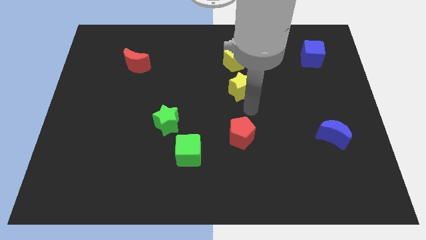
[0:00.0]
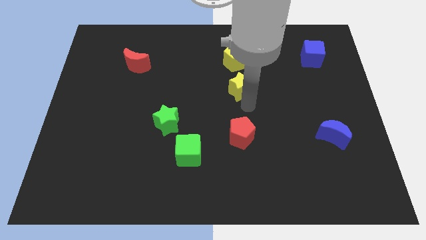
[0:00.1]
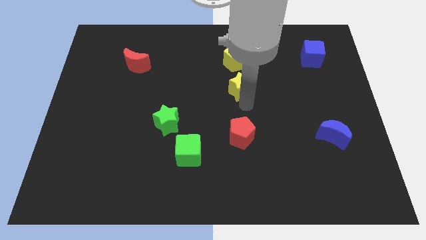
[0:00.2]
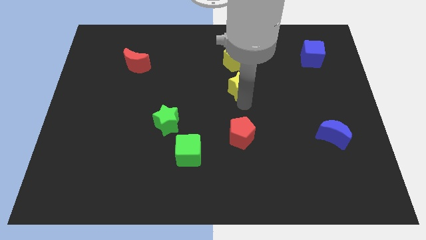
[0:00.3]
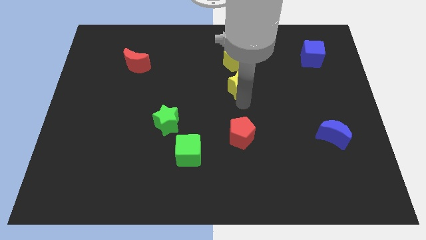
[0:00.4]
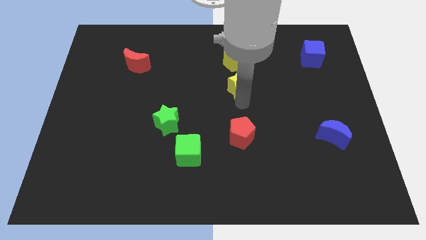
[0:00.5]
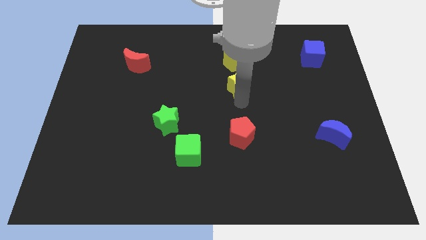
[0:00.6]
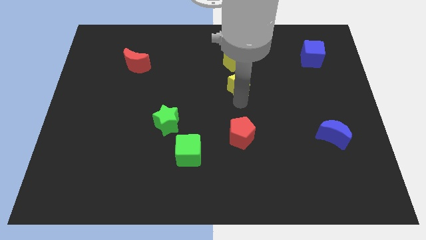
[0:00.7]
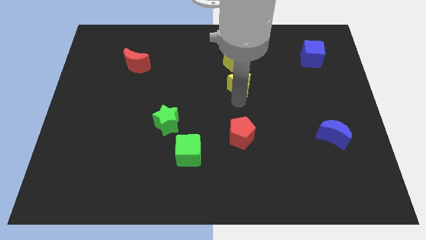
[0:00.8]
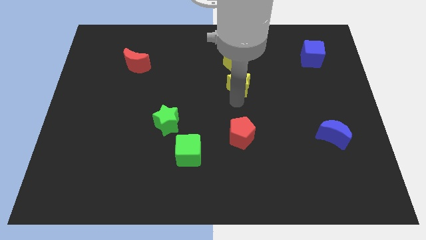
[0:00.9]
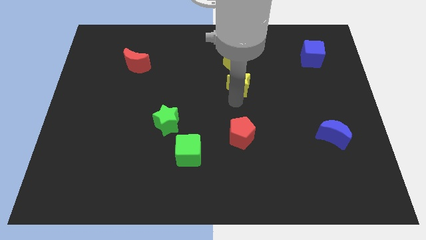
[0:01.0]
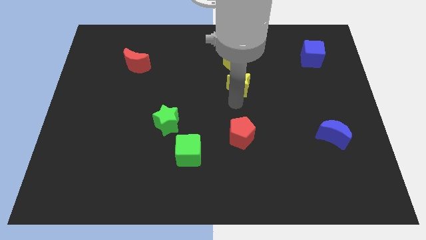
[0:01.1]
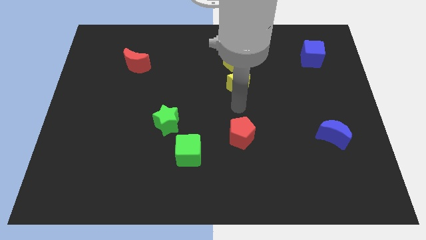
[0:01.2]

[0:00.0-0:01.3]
push yellow star below yellow pentagon

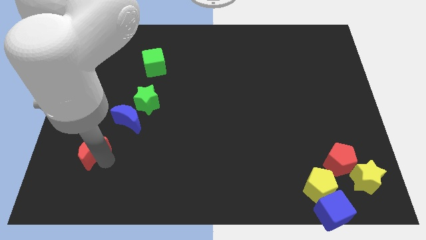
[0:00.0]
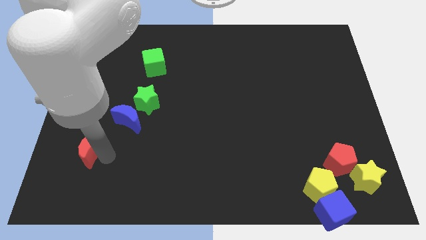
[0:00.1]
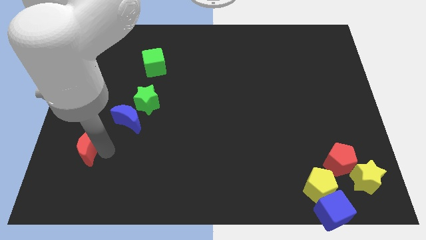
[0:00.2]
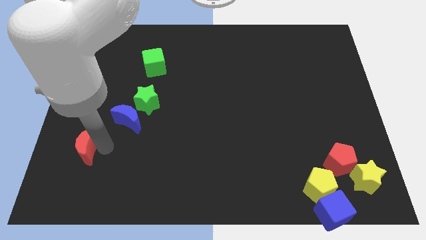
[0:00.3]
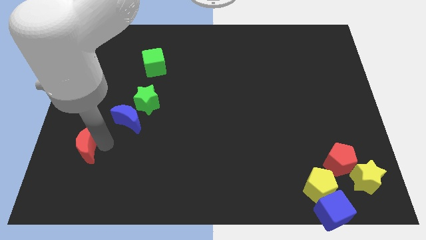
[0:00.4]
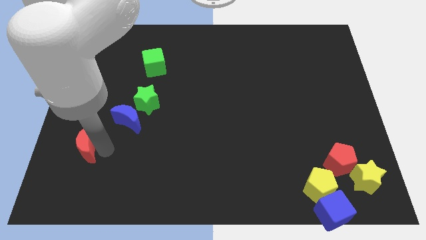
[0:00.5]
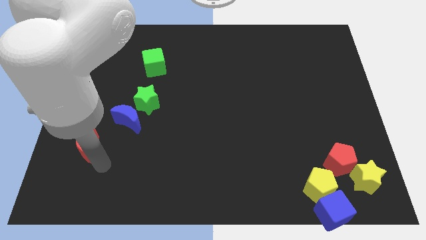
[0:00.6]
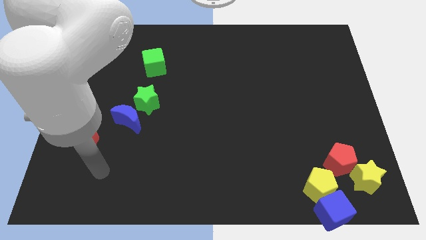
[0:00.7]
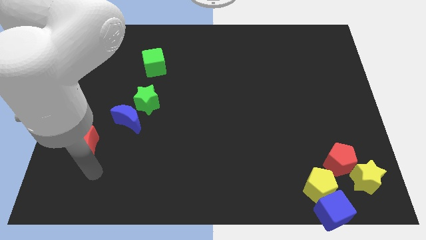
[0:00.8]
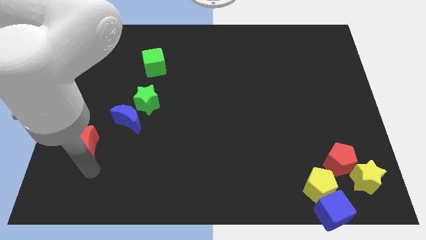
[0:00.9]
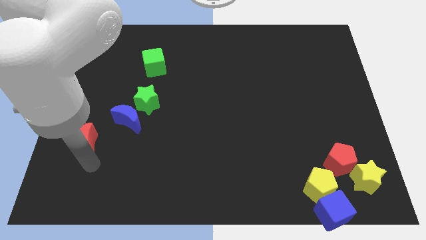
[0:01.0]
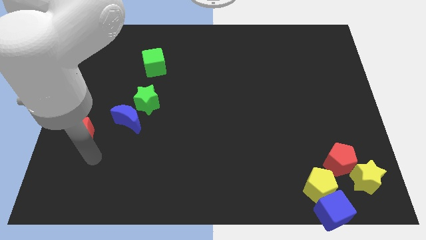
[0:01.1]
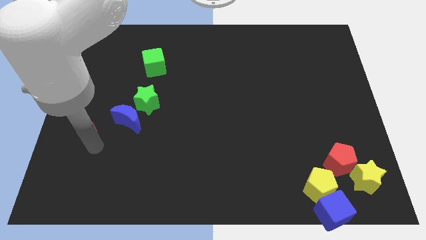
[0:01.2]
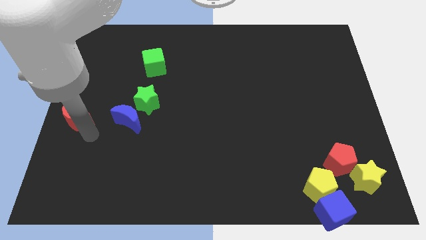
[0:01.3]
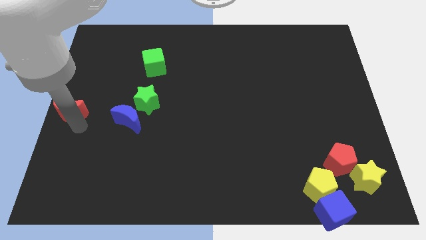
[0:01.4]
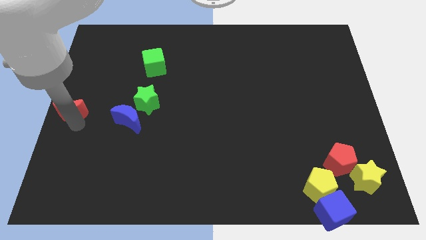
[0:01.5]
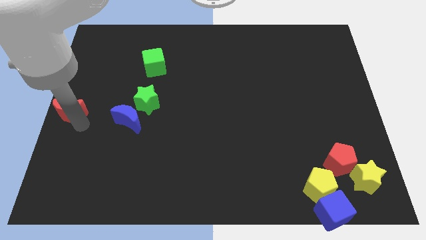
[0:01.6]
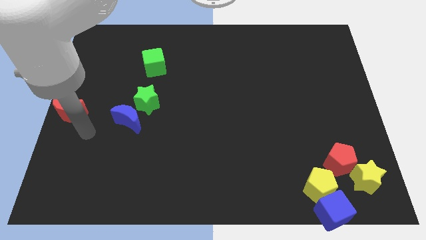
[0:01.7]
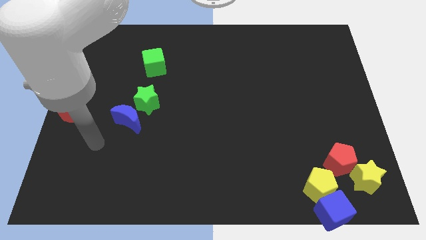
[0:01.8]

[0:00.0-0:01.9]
place the red crescent to the left center of the board

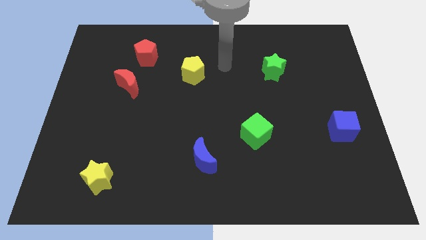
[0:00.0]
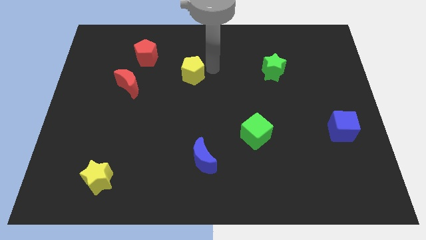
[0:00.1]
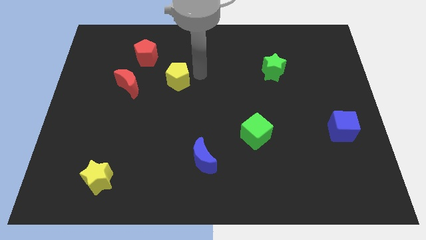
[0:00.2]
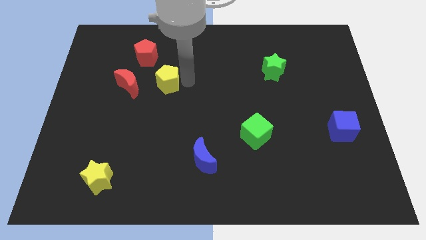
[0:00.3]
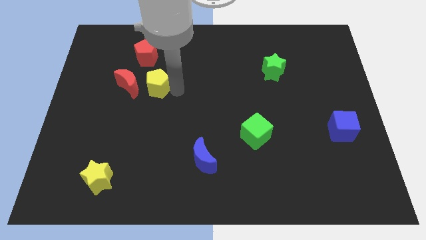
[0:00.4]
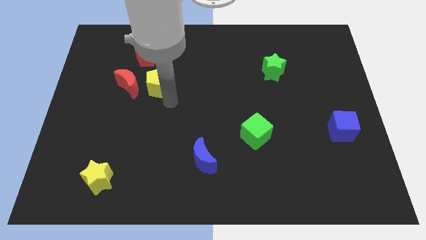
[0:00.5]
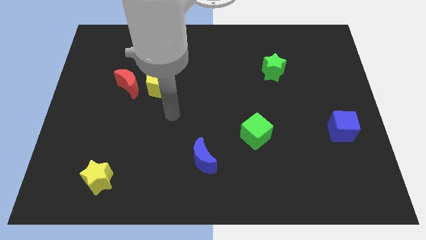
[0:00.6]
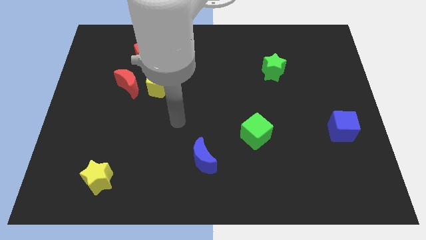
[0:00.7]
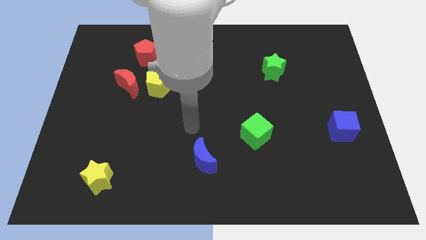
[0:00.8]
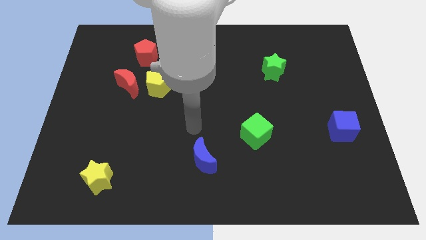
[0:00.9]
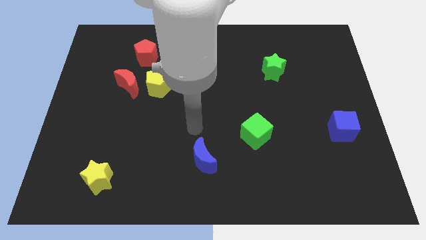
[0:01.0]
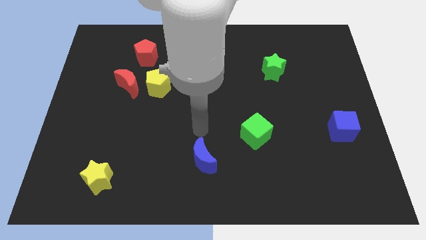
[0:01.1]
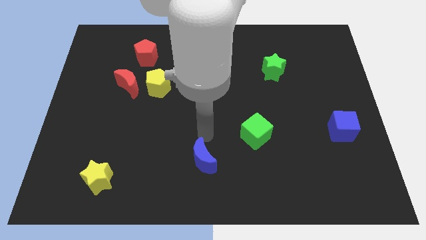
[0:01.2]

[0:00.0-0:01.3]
move your arm to the top side of the blue moon

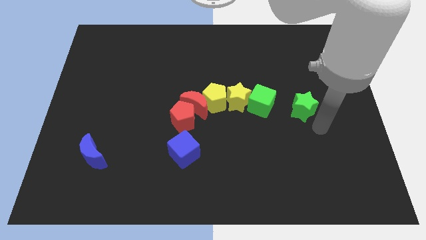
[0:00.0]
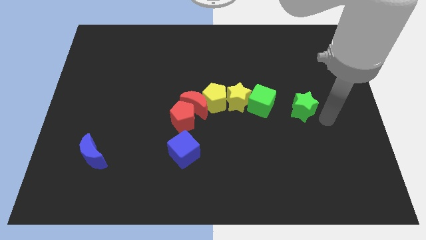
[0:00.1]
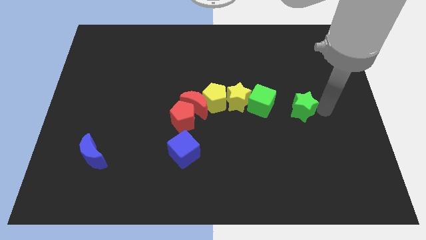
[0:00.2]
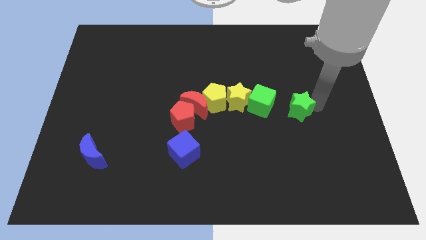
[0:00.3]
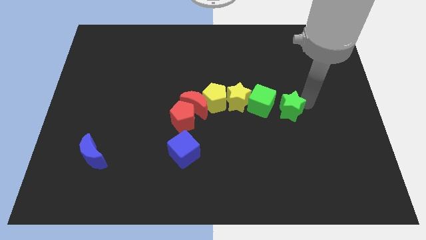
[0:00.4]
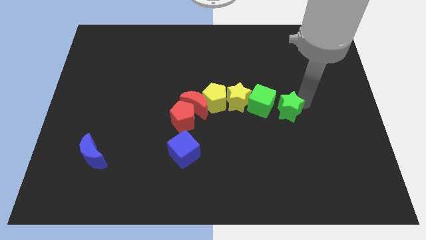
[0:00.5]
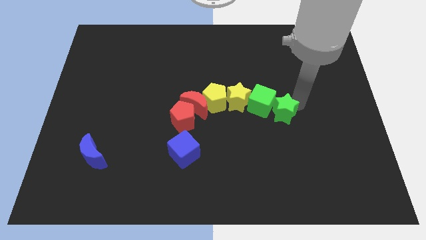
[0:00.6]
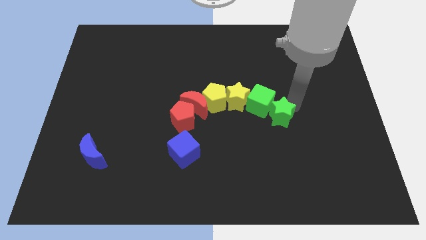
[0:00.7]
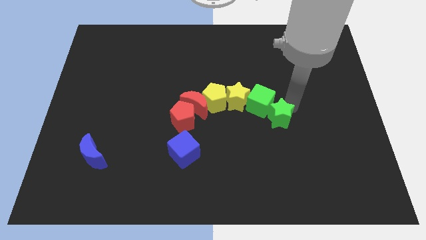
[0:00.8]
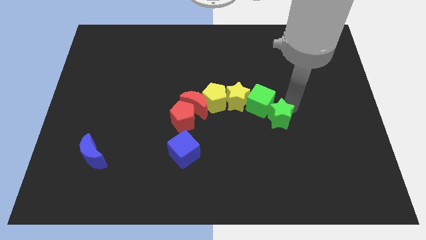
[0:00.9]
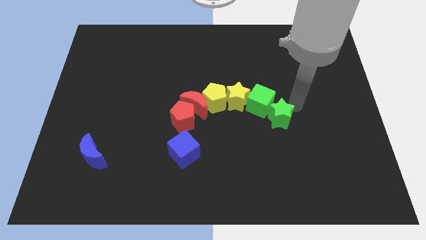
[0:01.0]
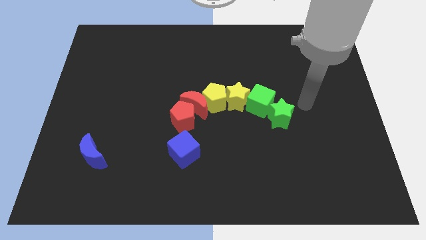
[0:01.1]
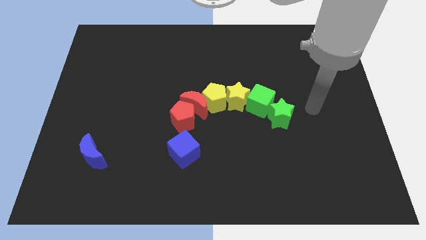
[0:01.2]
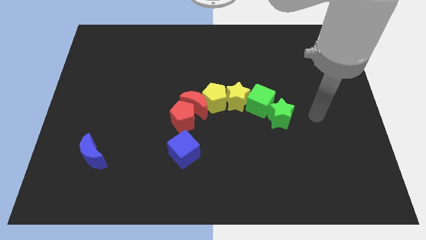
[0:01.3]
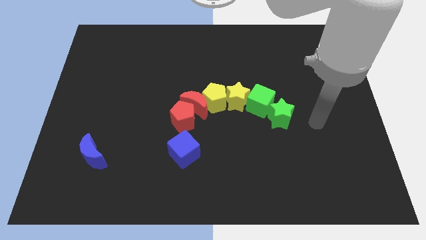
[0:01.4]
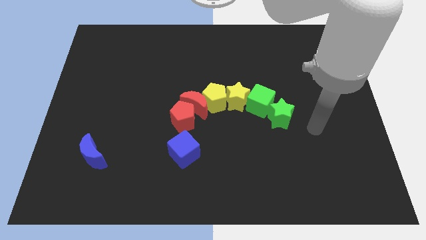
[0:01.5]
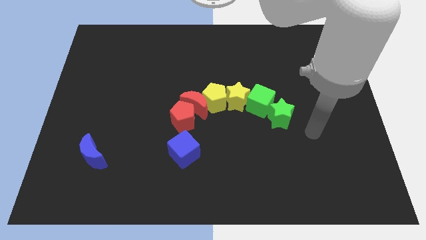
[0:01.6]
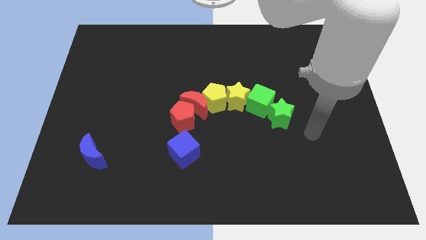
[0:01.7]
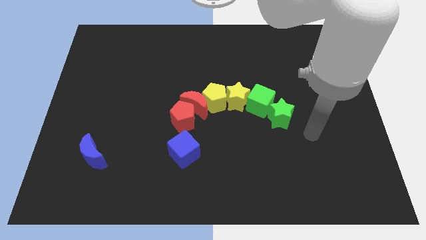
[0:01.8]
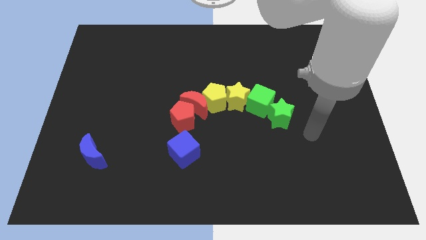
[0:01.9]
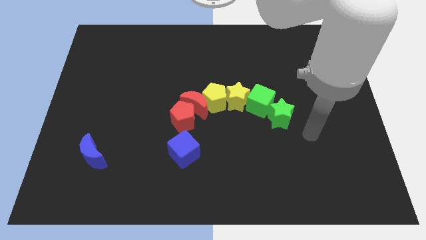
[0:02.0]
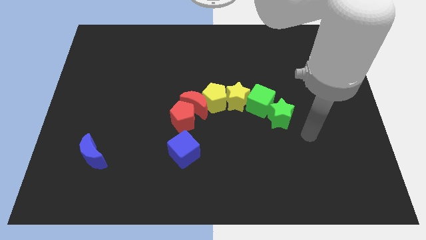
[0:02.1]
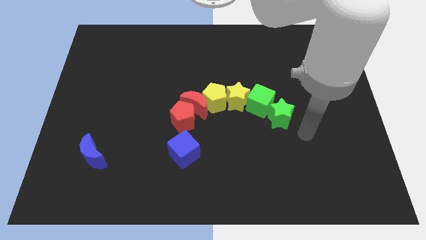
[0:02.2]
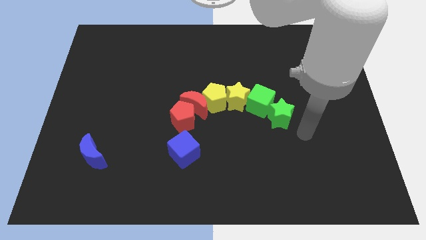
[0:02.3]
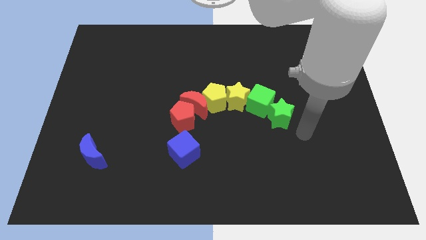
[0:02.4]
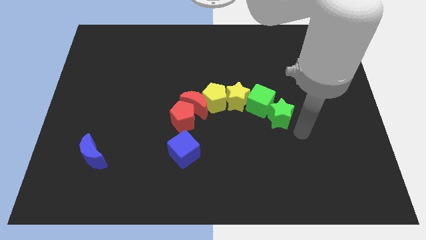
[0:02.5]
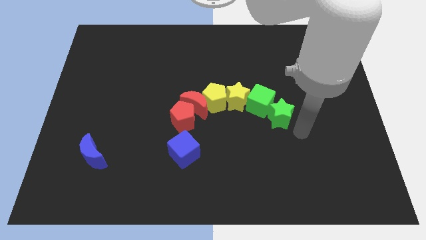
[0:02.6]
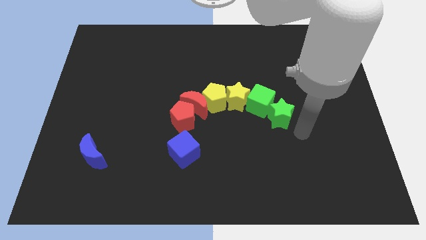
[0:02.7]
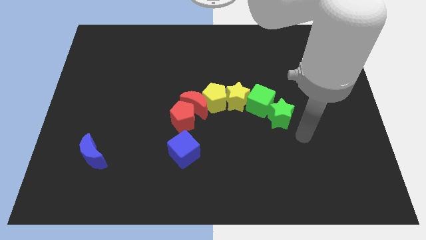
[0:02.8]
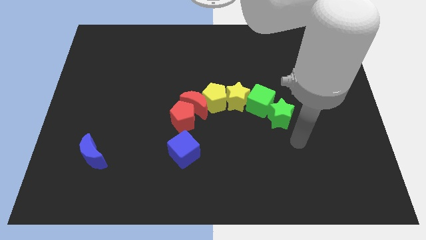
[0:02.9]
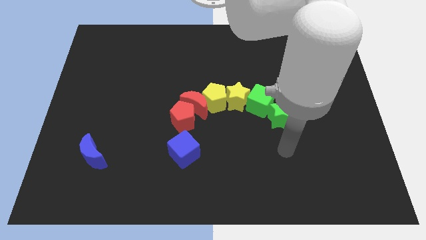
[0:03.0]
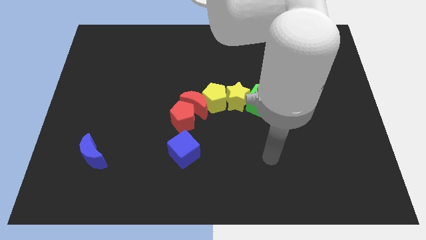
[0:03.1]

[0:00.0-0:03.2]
move green star to the right side of the green cube

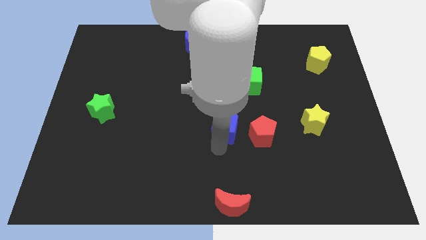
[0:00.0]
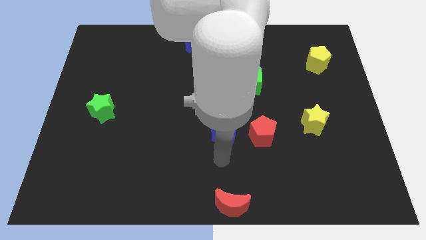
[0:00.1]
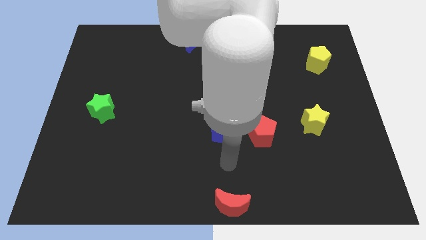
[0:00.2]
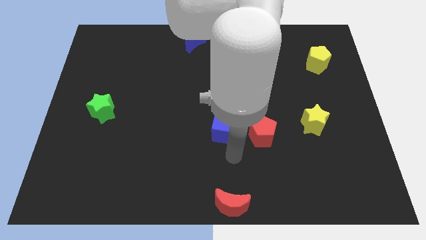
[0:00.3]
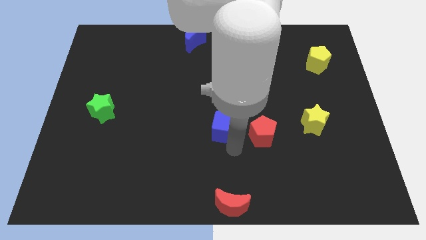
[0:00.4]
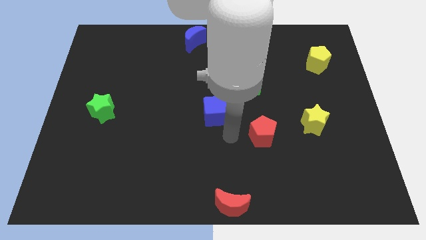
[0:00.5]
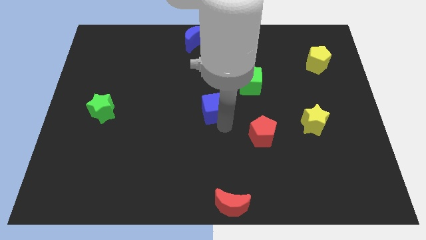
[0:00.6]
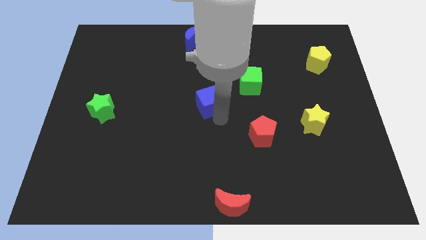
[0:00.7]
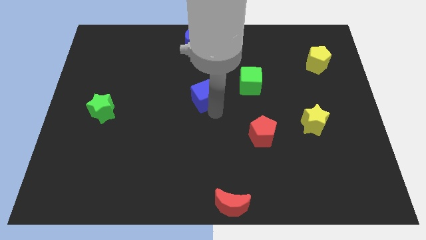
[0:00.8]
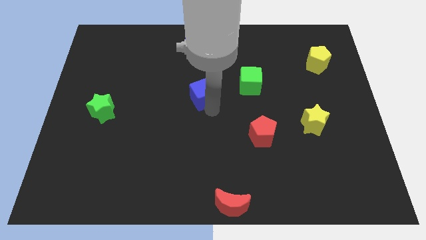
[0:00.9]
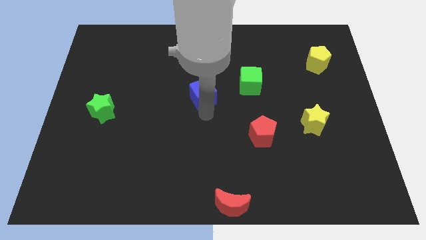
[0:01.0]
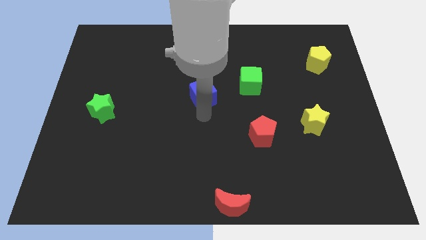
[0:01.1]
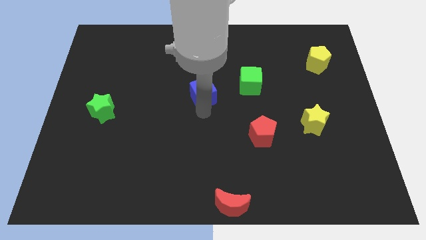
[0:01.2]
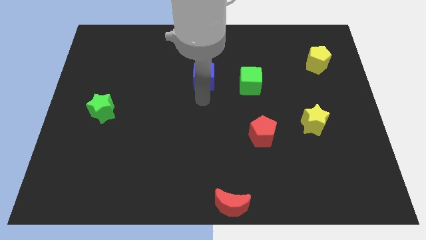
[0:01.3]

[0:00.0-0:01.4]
move the blue cube to the horizontal left of the green cube
